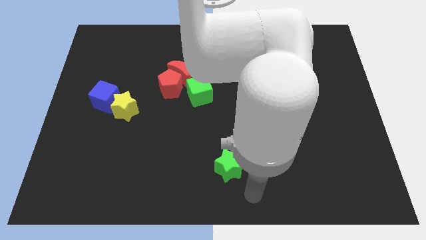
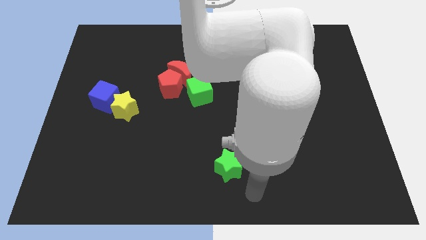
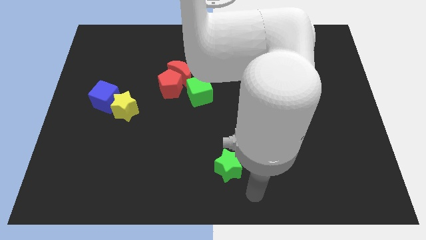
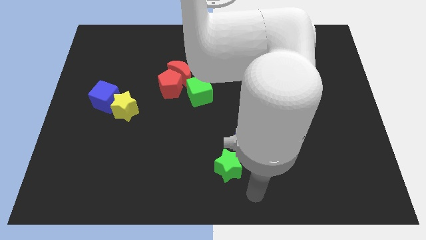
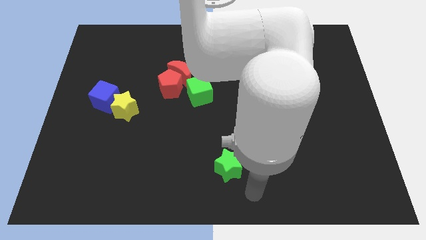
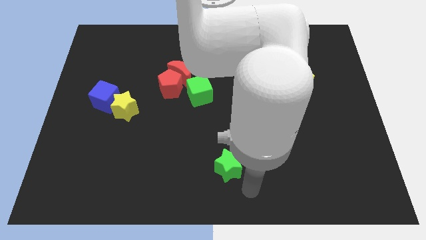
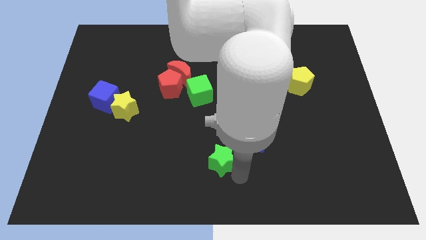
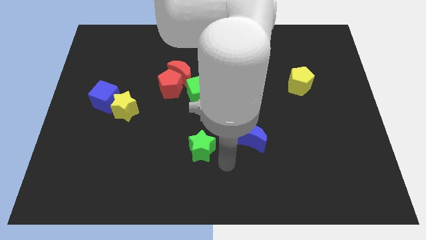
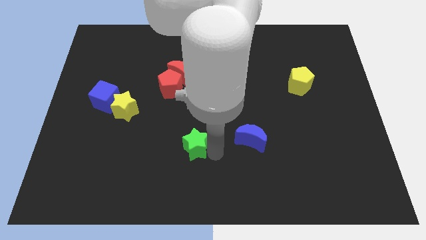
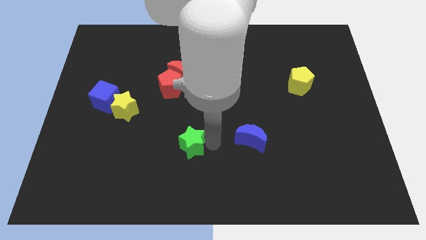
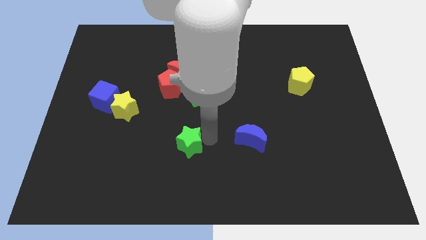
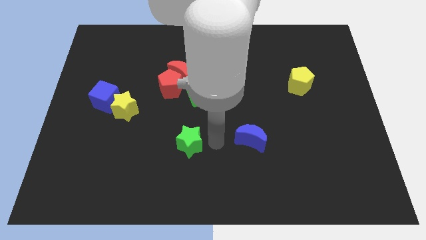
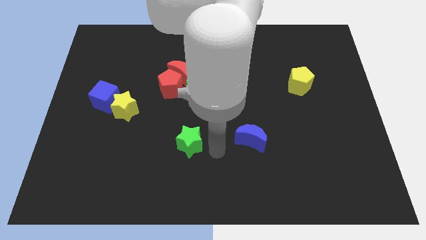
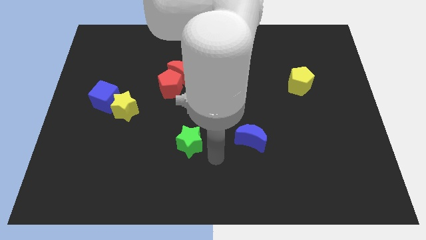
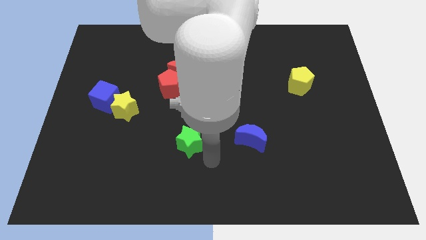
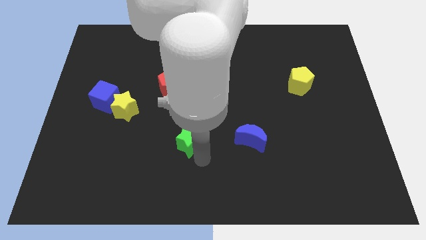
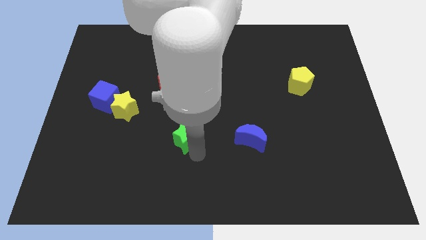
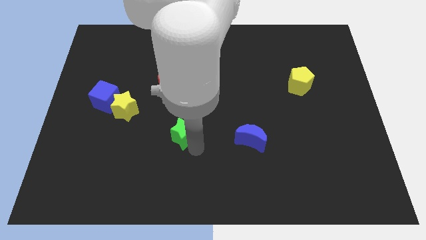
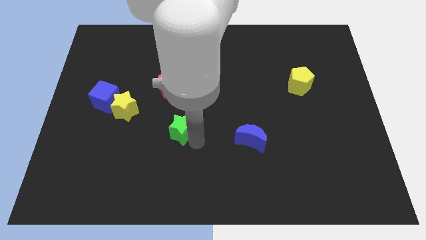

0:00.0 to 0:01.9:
place the green star to the left side of blue moon

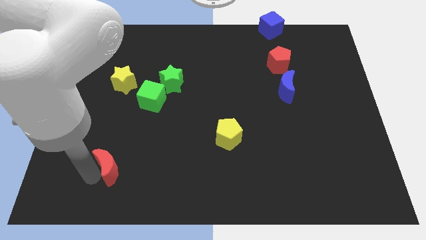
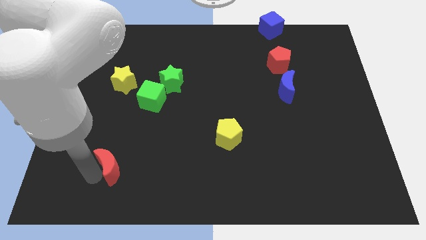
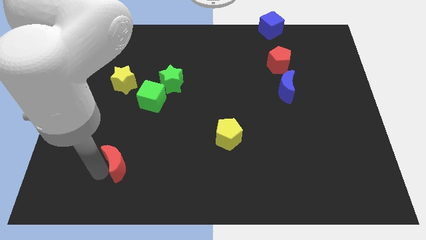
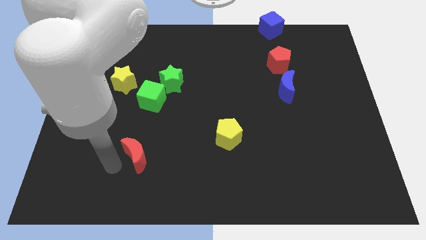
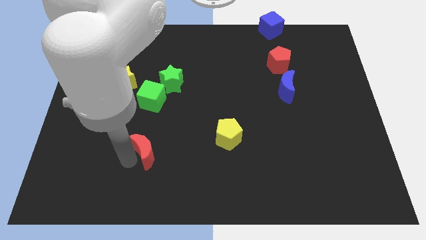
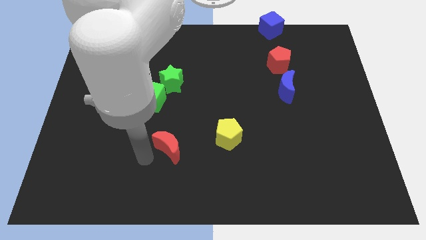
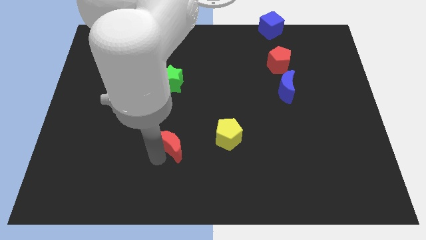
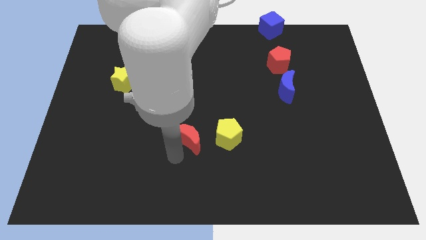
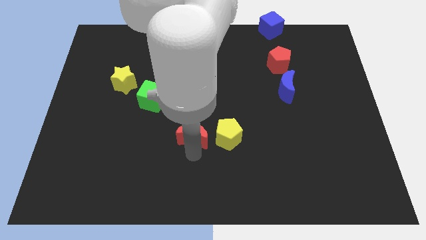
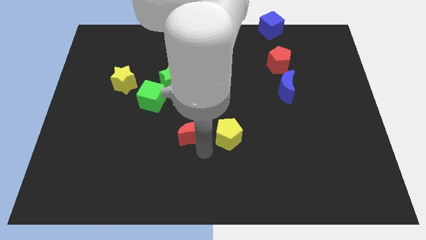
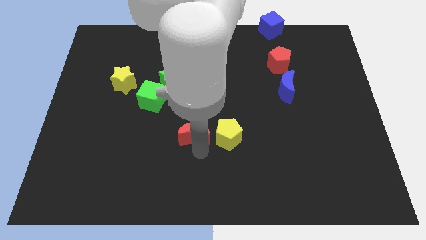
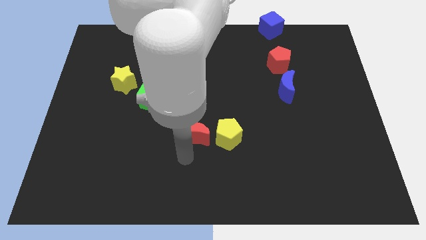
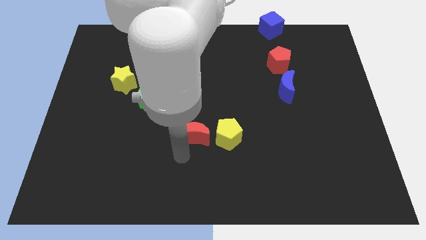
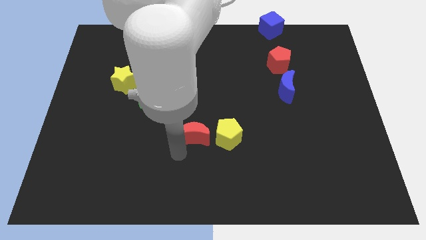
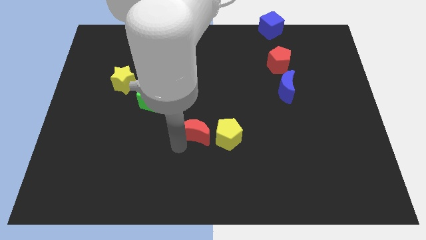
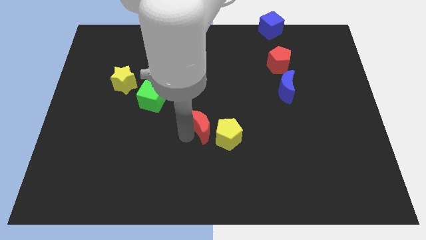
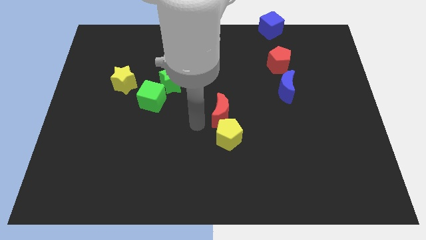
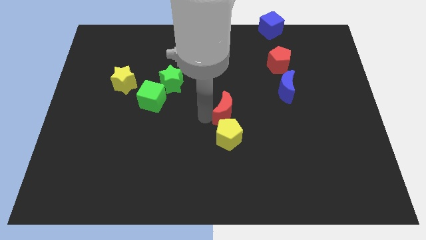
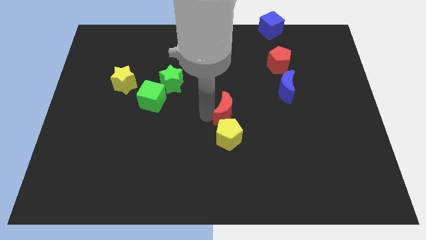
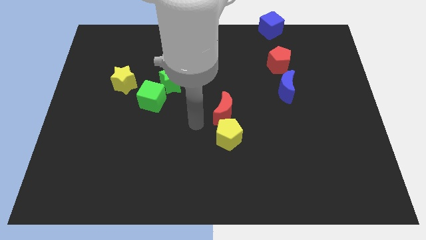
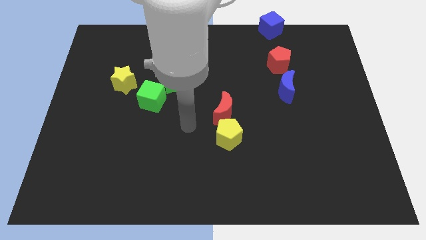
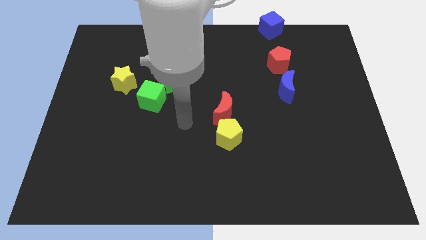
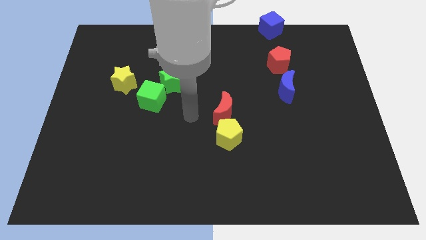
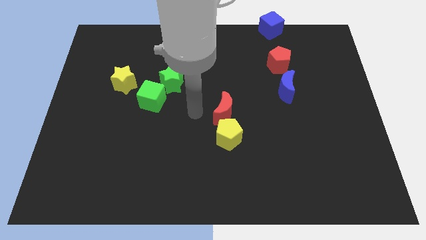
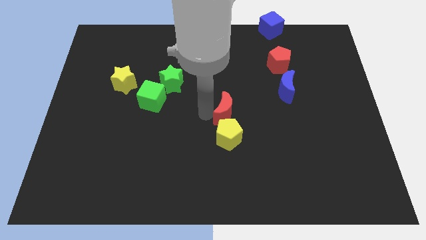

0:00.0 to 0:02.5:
slide red moon above yellow pentagon

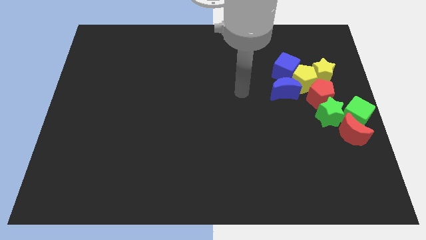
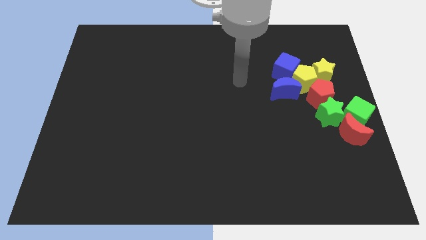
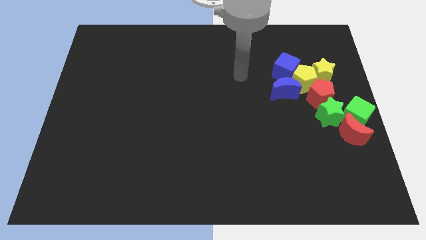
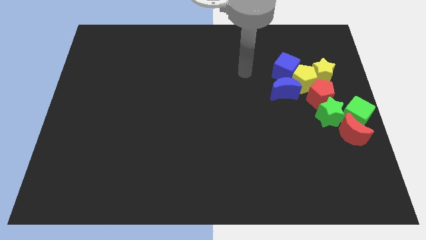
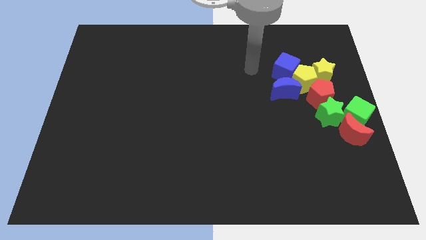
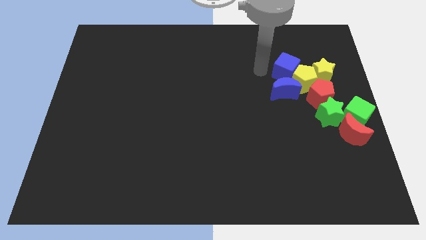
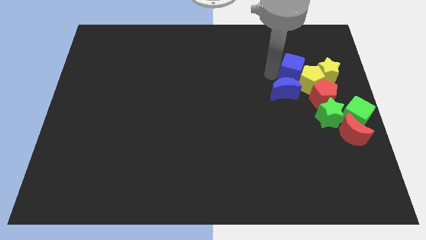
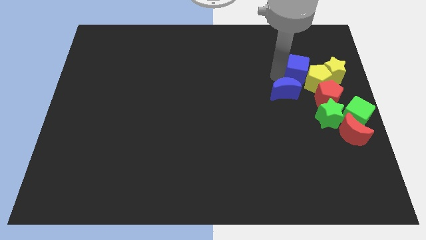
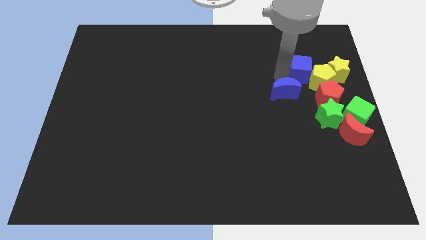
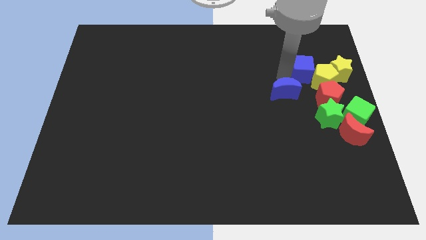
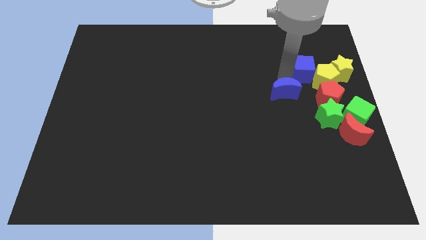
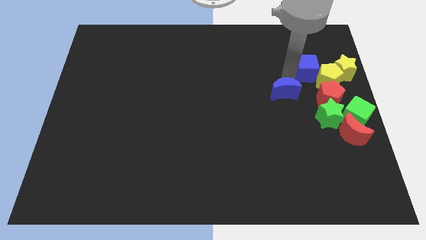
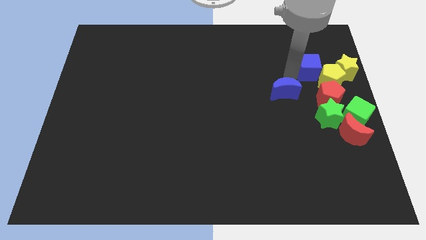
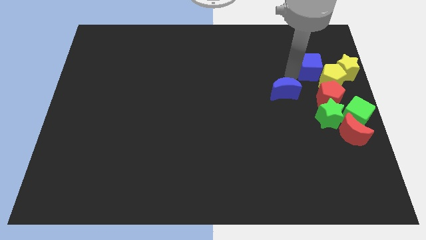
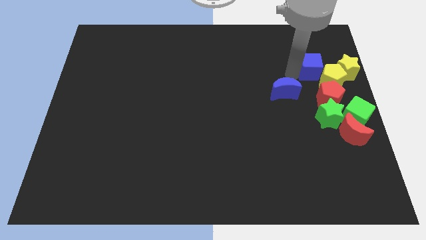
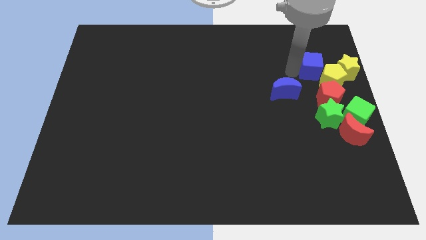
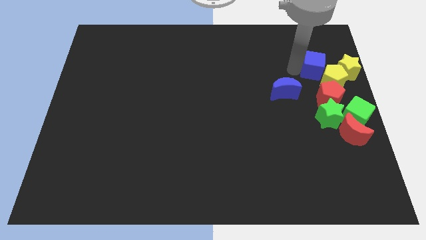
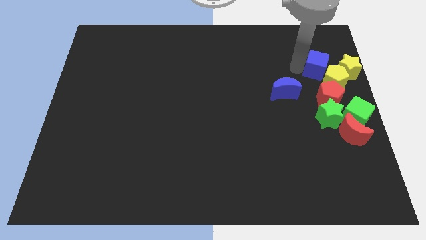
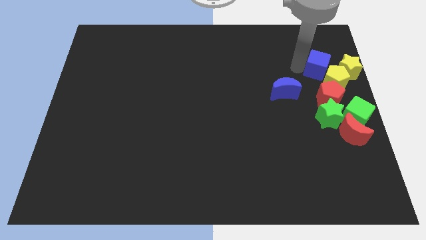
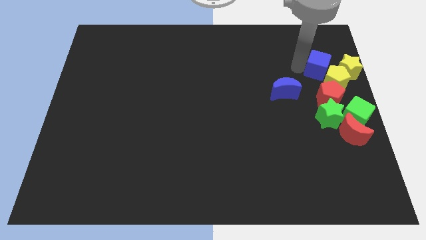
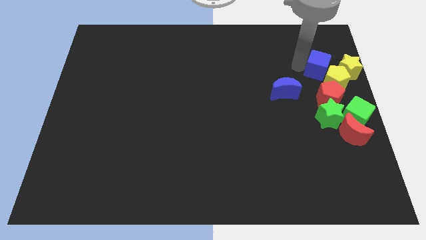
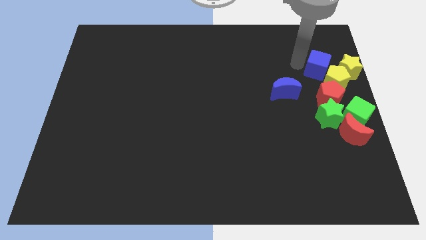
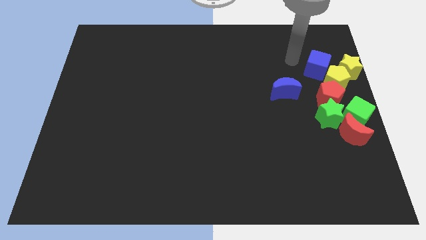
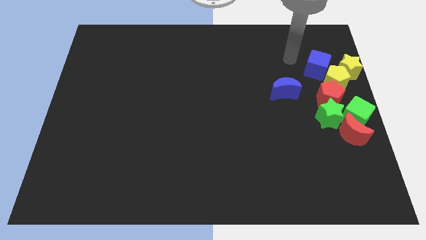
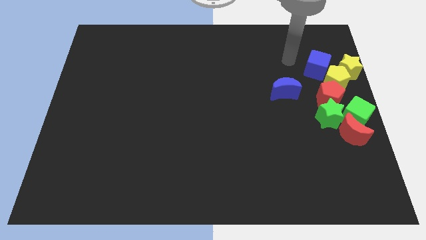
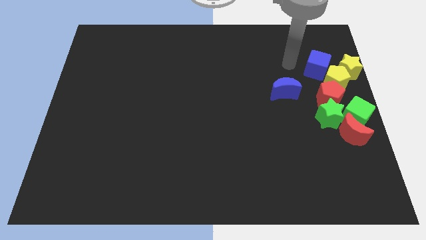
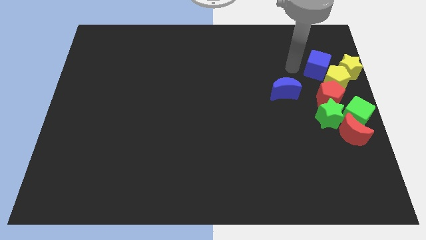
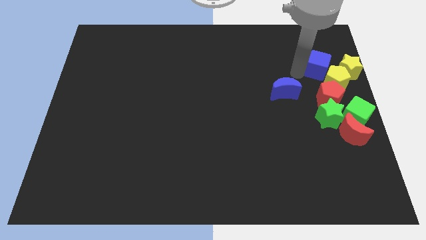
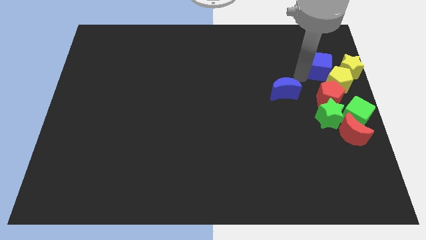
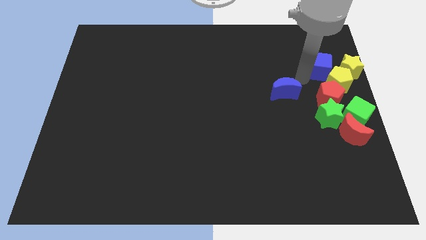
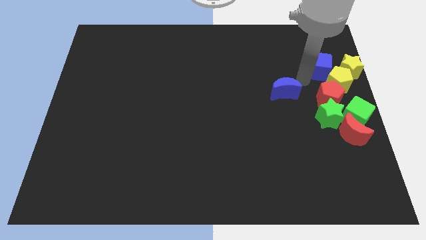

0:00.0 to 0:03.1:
push blue cube slightly towards right side

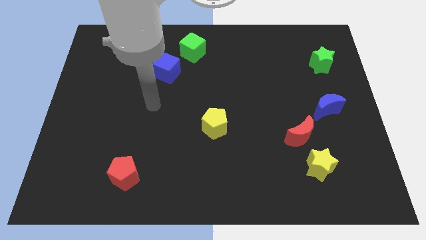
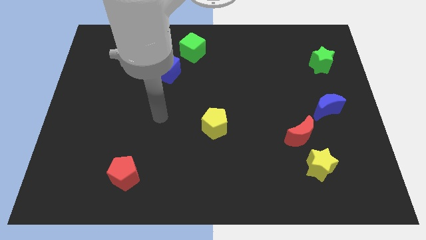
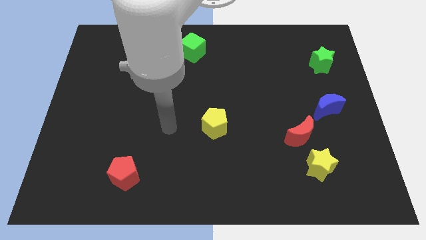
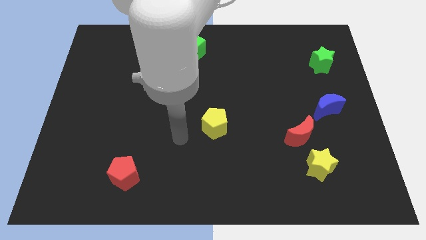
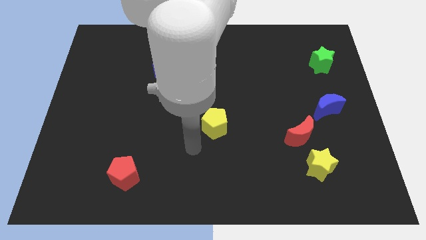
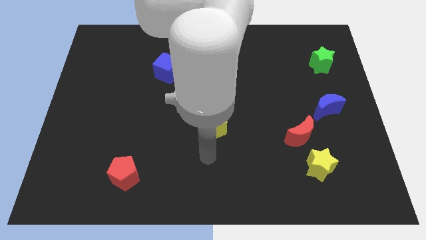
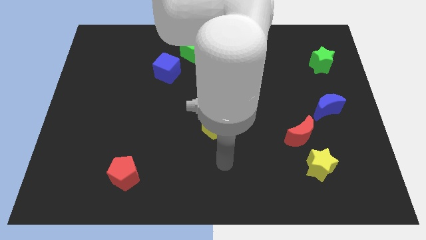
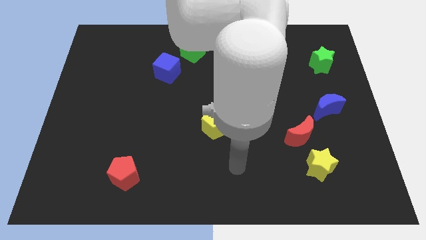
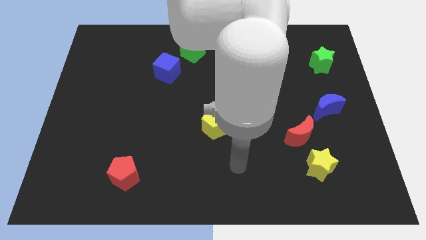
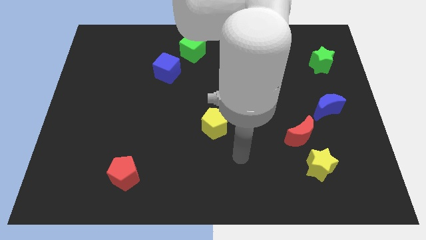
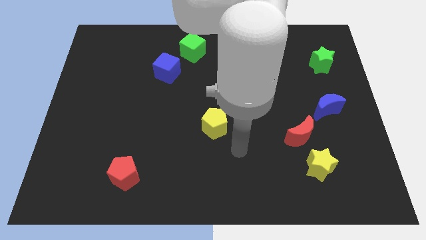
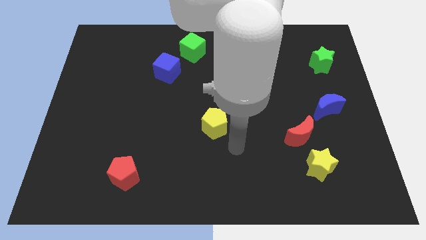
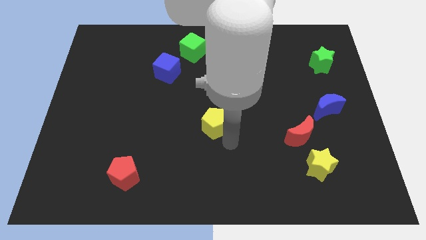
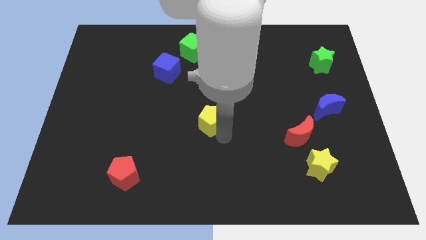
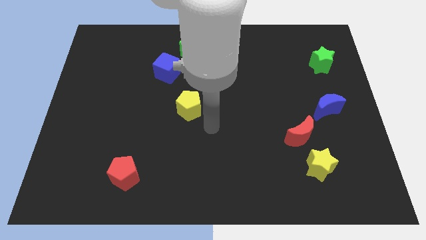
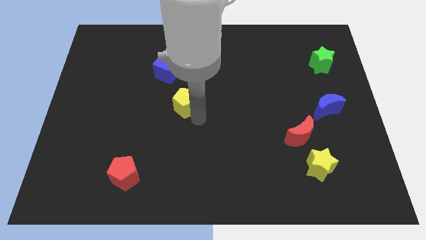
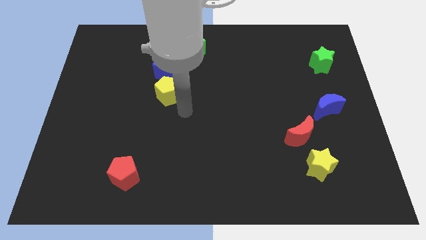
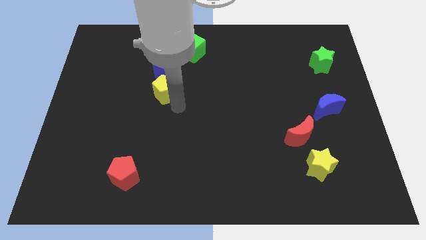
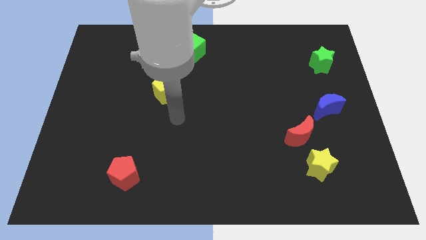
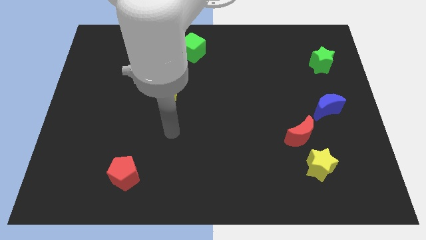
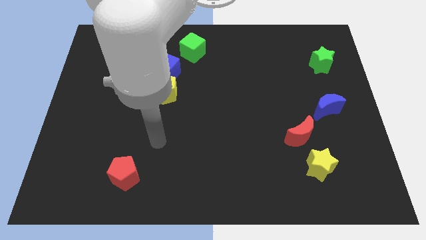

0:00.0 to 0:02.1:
move the yellow pentagon into the blue cube
